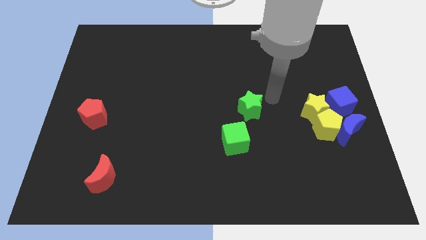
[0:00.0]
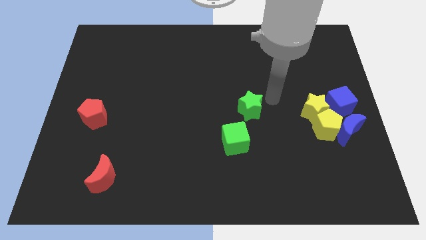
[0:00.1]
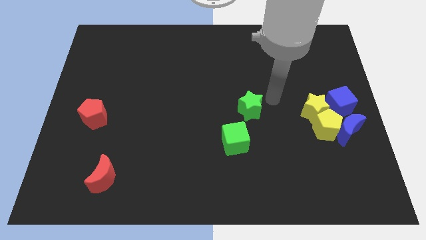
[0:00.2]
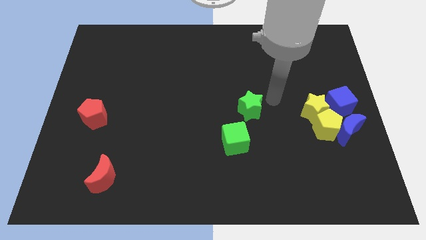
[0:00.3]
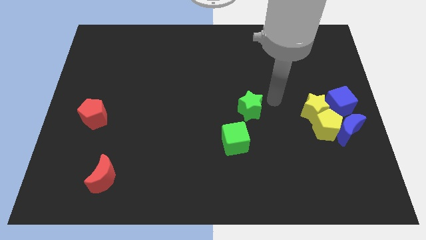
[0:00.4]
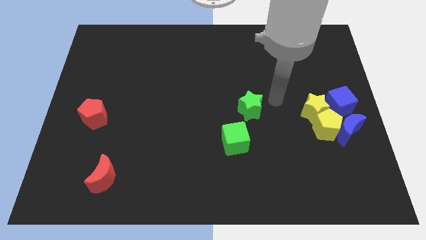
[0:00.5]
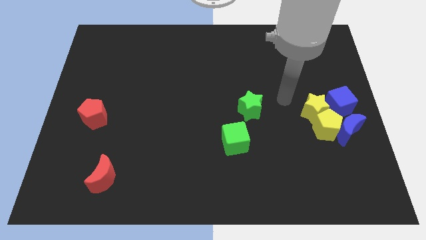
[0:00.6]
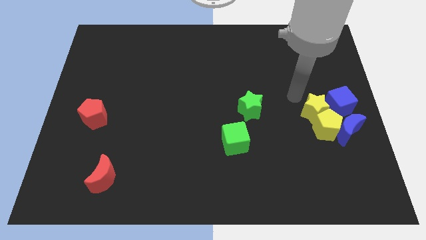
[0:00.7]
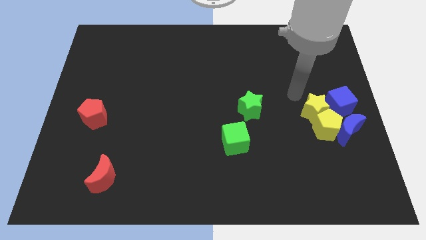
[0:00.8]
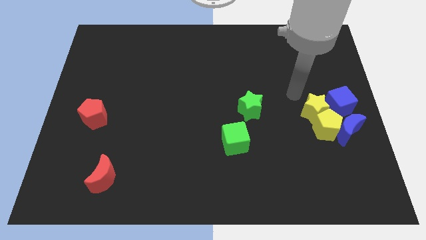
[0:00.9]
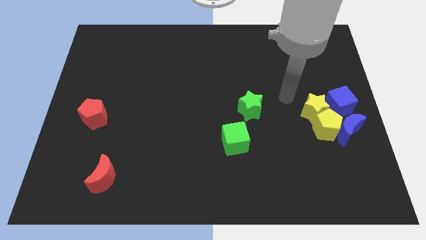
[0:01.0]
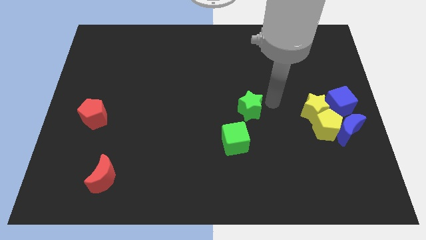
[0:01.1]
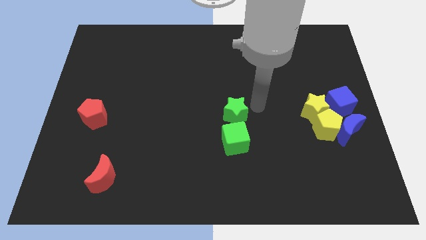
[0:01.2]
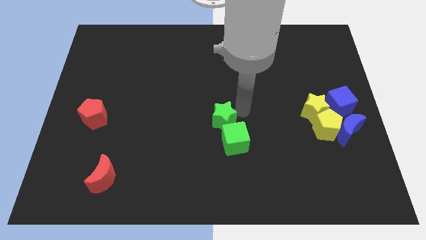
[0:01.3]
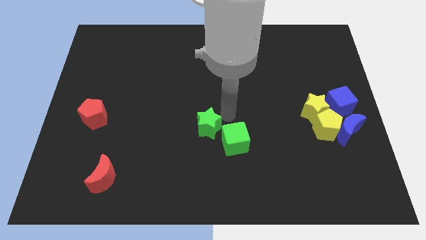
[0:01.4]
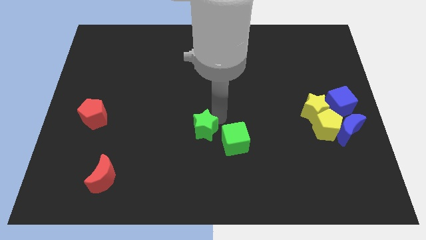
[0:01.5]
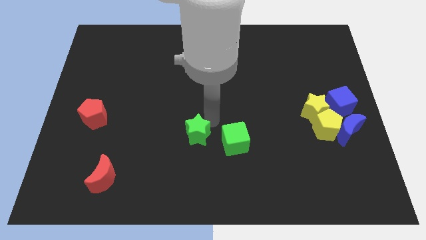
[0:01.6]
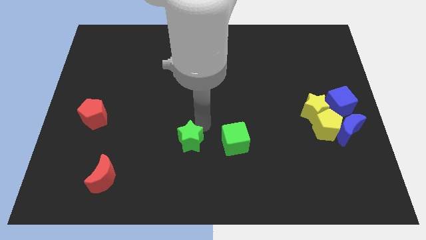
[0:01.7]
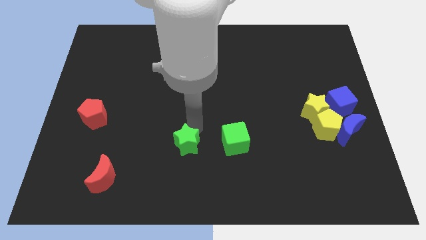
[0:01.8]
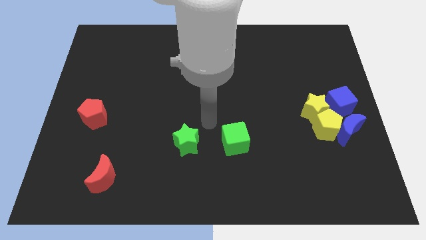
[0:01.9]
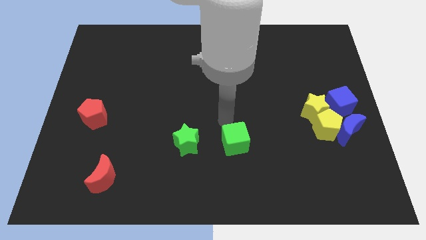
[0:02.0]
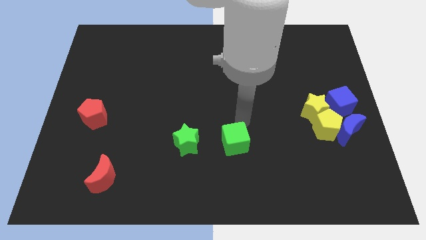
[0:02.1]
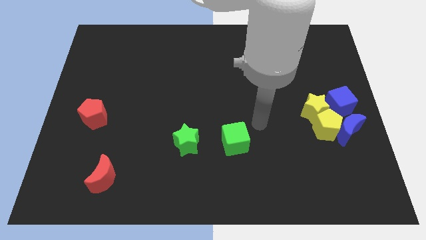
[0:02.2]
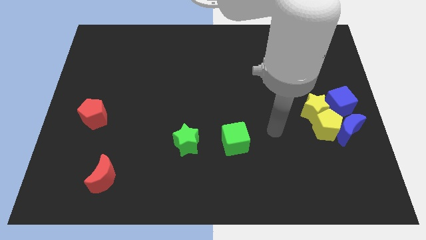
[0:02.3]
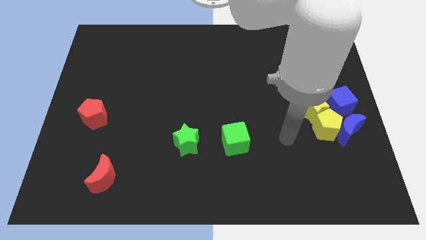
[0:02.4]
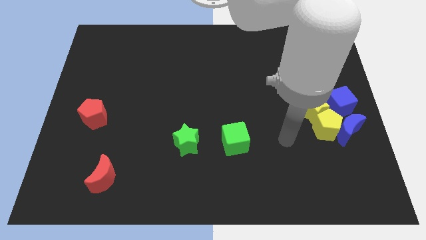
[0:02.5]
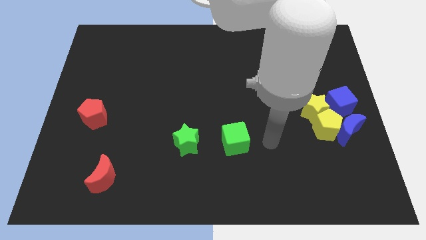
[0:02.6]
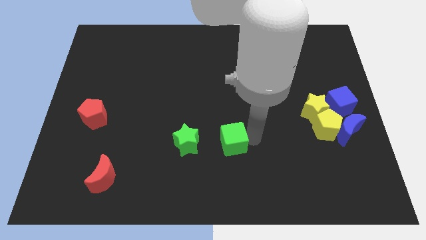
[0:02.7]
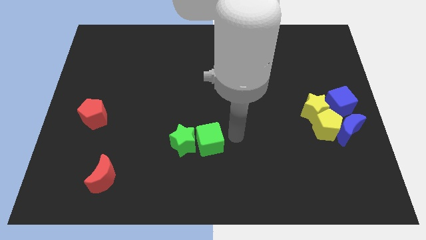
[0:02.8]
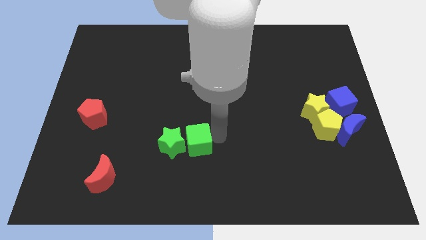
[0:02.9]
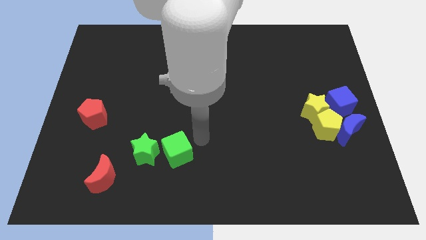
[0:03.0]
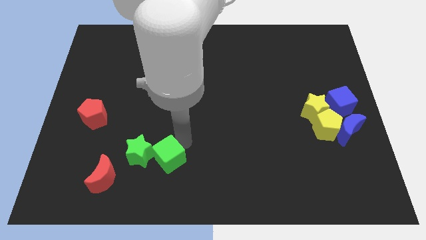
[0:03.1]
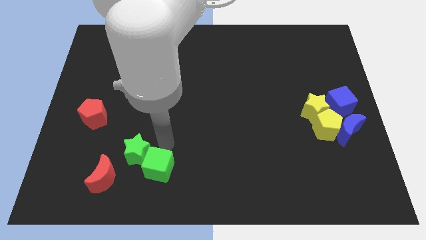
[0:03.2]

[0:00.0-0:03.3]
move the green blocks diagonally top right to red moon

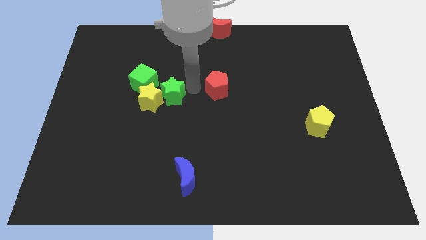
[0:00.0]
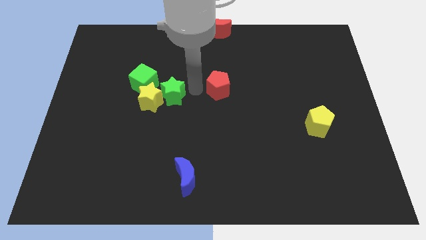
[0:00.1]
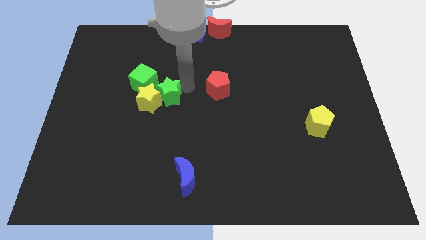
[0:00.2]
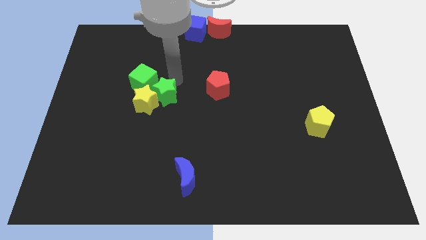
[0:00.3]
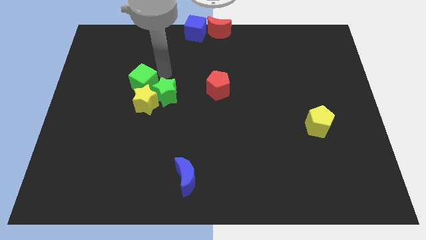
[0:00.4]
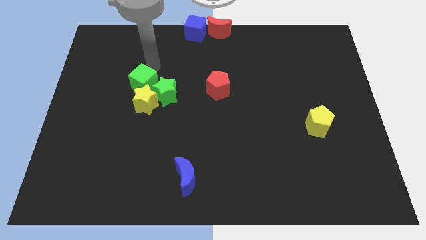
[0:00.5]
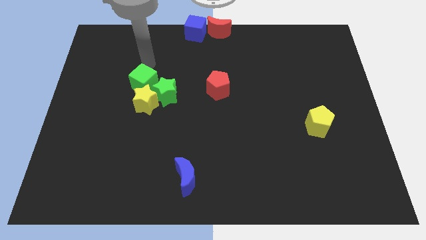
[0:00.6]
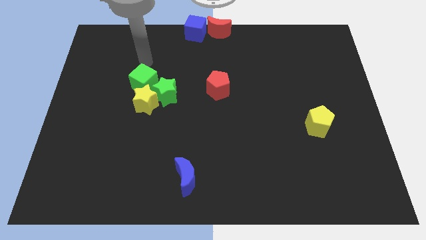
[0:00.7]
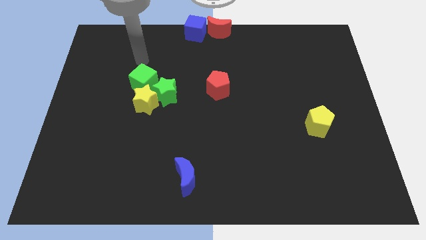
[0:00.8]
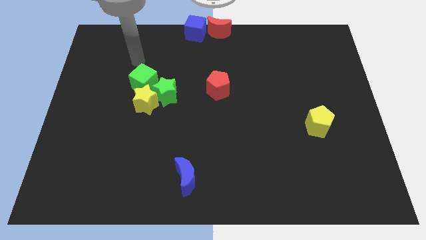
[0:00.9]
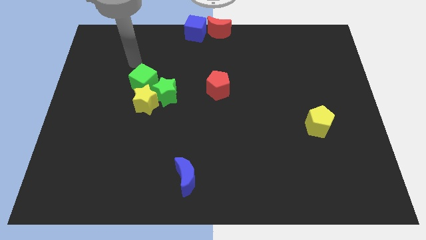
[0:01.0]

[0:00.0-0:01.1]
push the green star into the yellow star

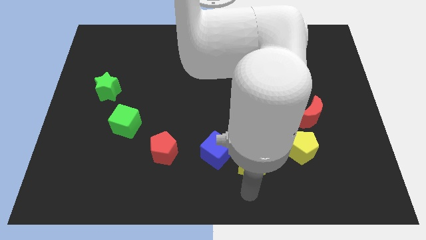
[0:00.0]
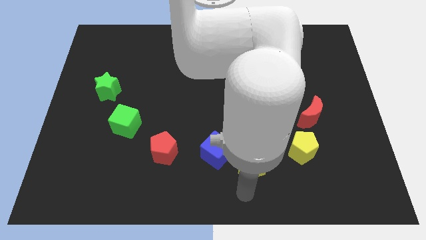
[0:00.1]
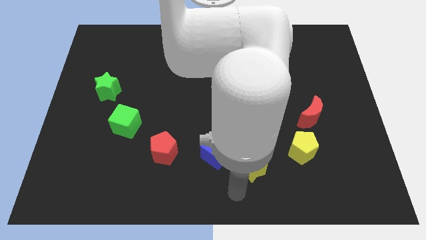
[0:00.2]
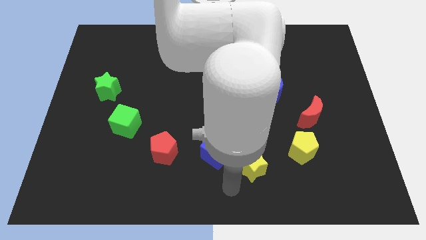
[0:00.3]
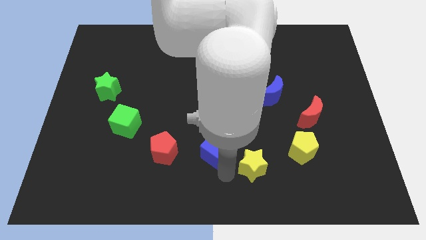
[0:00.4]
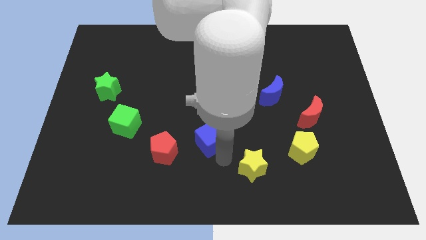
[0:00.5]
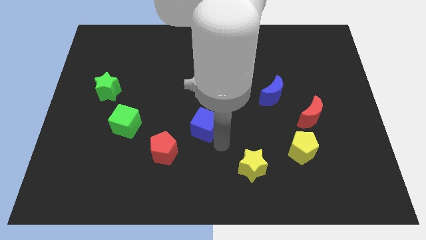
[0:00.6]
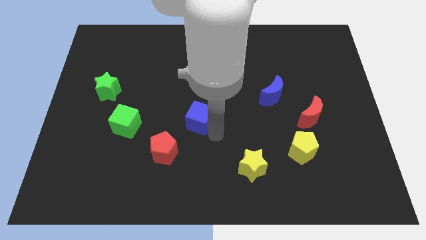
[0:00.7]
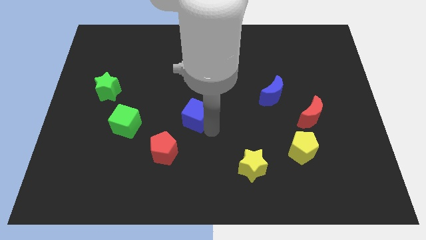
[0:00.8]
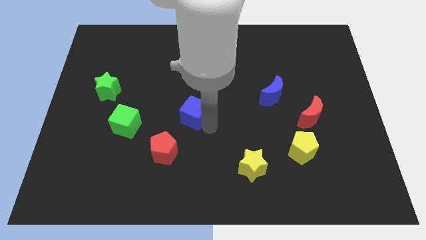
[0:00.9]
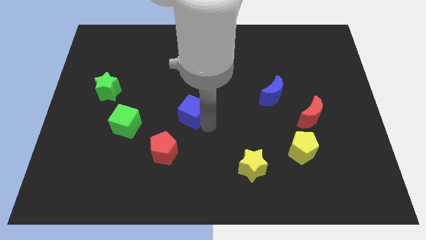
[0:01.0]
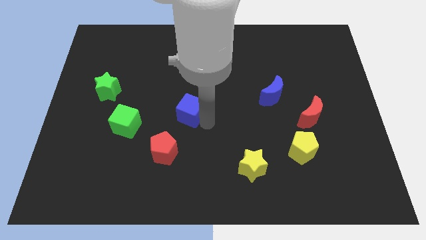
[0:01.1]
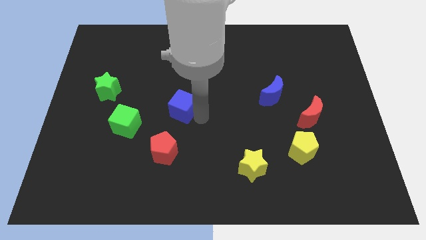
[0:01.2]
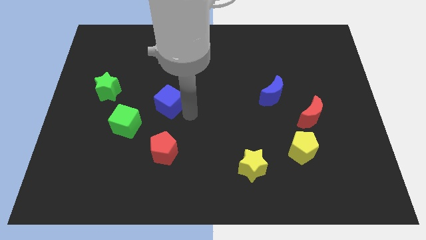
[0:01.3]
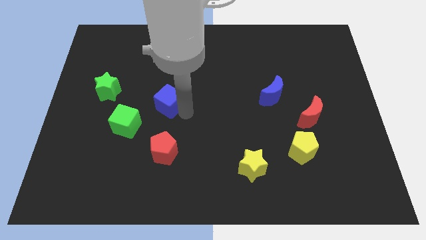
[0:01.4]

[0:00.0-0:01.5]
move the blue cube above the red pentagon

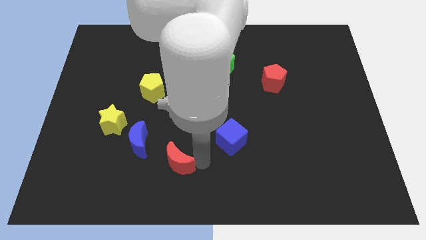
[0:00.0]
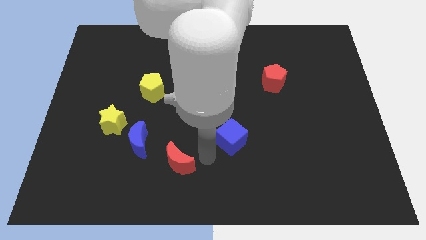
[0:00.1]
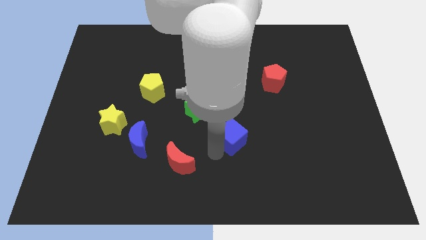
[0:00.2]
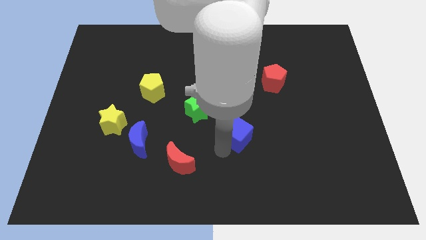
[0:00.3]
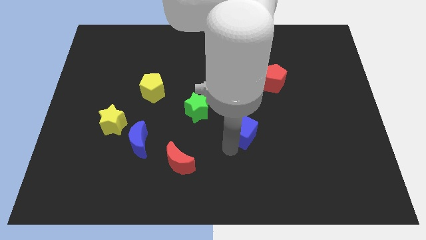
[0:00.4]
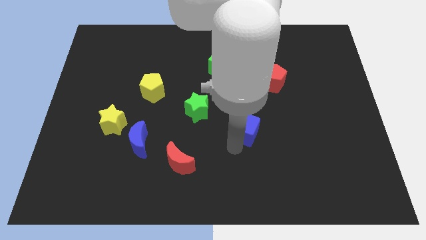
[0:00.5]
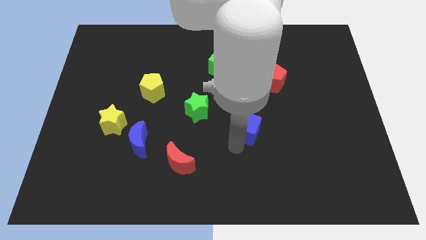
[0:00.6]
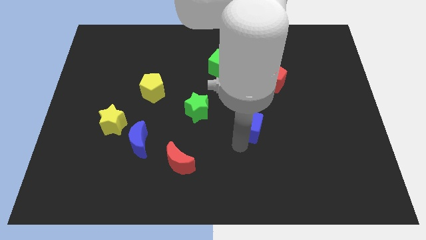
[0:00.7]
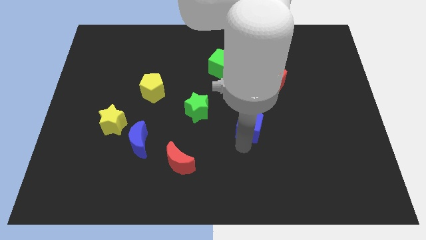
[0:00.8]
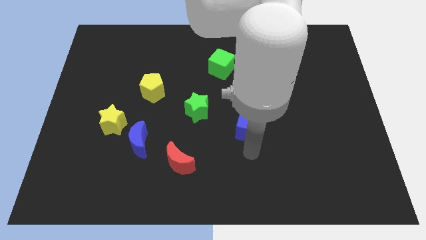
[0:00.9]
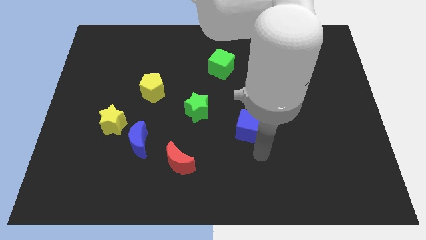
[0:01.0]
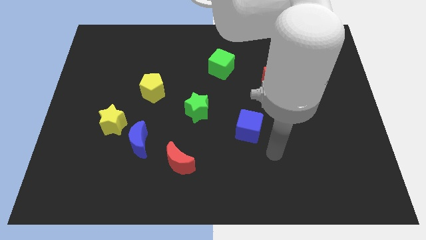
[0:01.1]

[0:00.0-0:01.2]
move the green star diagonally on the bottom right side of the green star

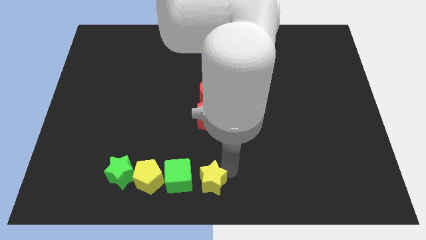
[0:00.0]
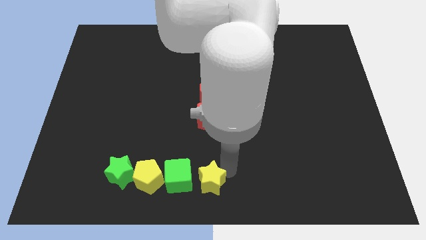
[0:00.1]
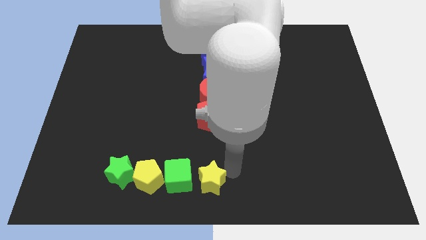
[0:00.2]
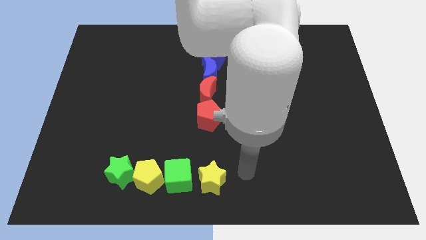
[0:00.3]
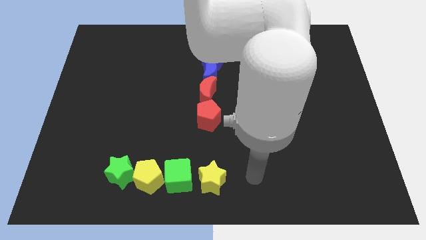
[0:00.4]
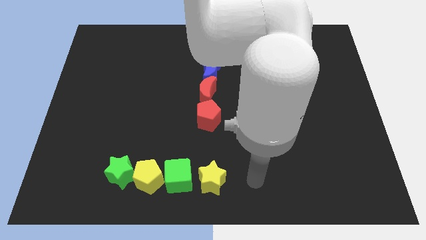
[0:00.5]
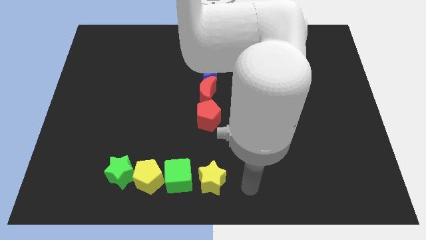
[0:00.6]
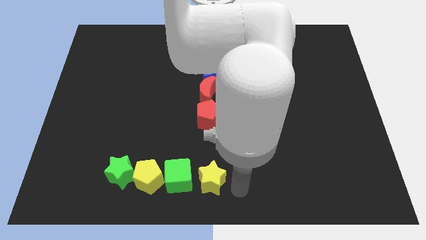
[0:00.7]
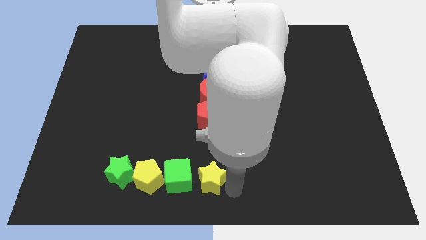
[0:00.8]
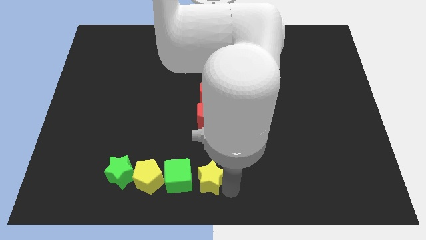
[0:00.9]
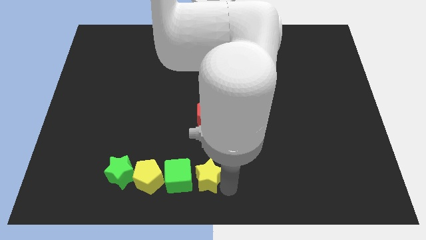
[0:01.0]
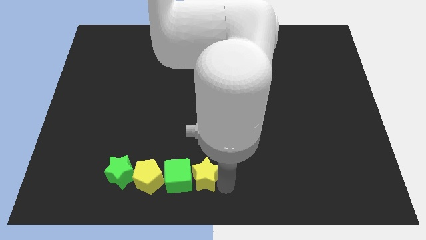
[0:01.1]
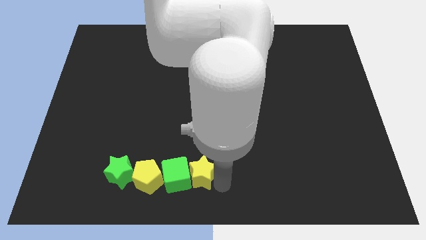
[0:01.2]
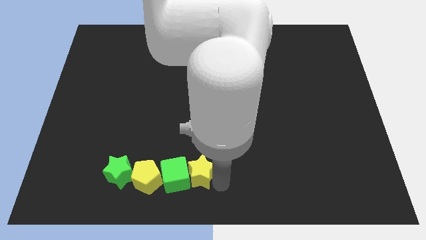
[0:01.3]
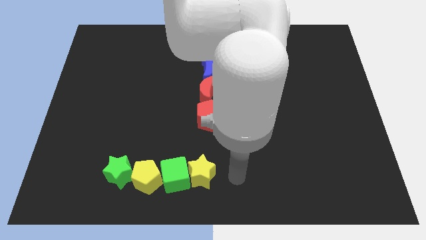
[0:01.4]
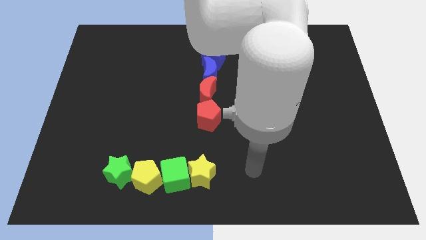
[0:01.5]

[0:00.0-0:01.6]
push the yellow star into the green cube
